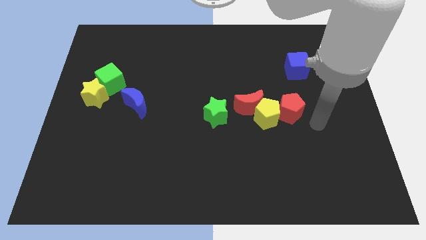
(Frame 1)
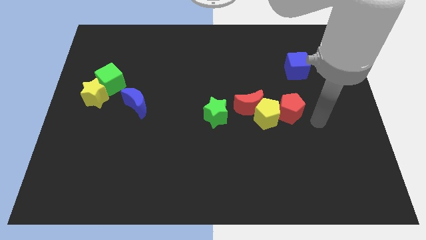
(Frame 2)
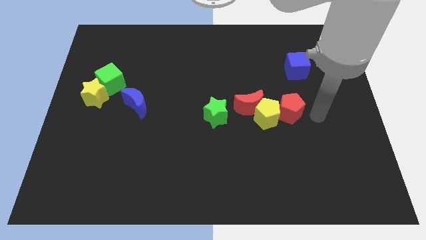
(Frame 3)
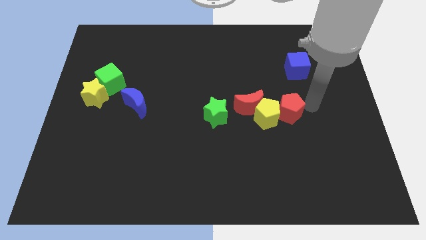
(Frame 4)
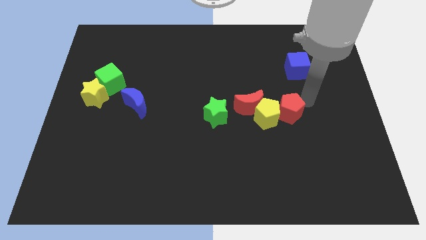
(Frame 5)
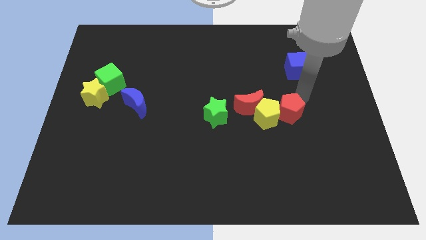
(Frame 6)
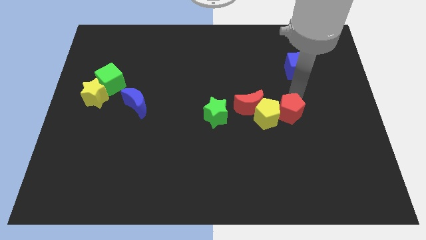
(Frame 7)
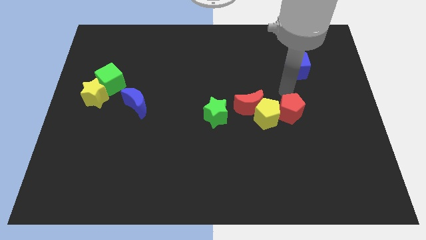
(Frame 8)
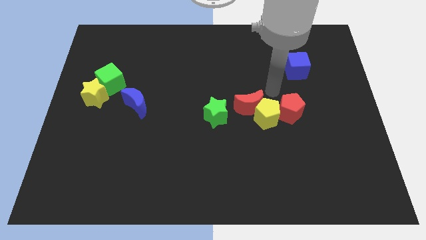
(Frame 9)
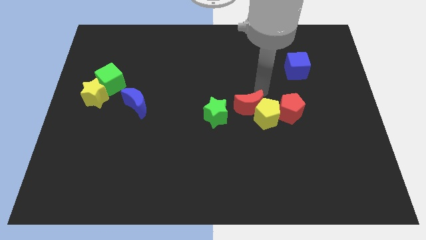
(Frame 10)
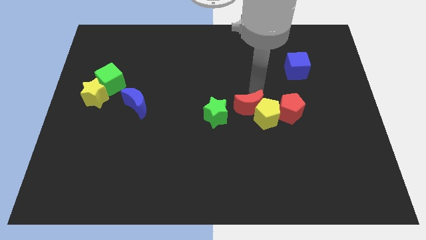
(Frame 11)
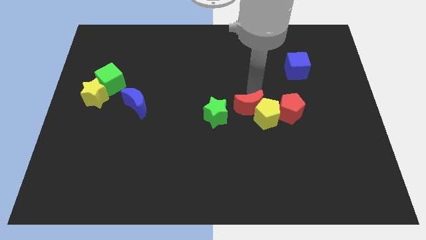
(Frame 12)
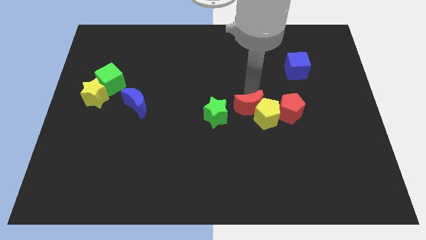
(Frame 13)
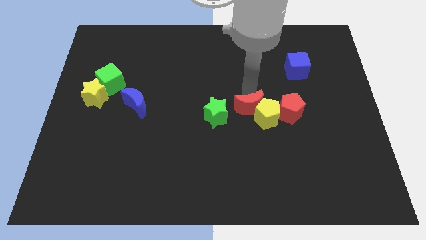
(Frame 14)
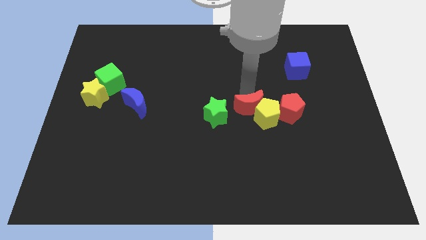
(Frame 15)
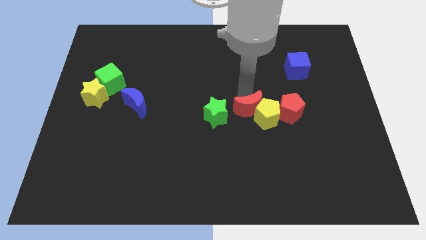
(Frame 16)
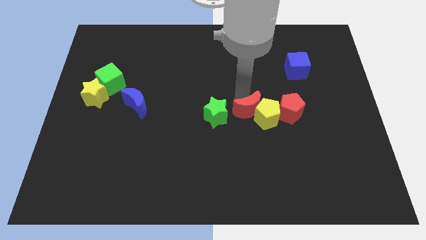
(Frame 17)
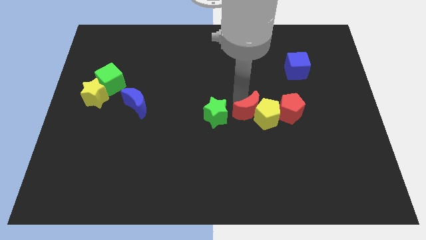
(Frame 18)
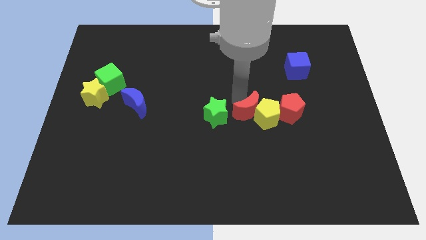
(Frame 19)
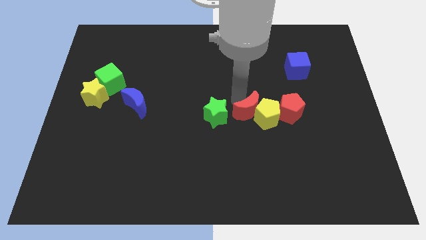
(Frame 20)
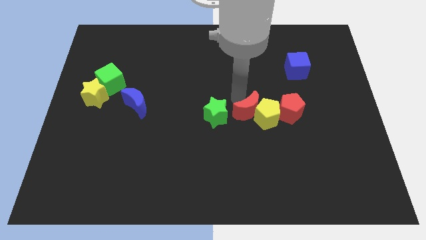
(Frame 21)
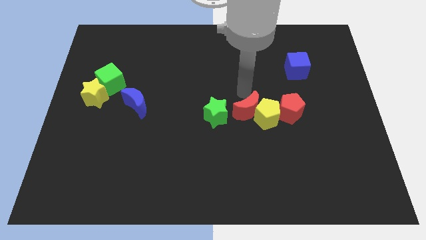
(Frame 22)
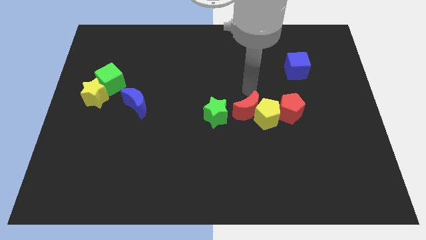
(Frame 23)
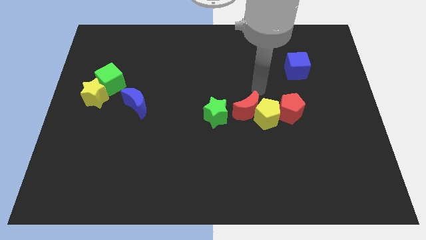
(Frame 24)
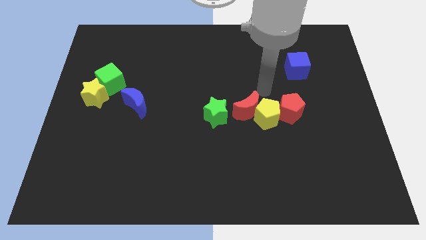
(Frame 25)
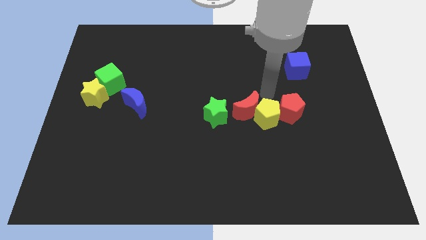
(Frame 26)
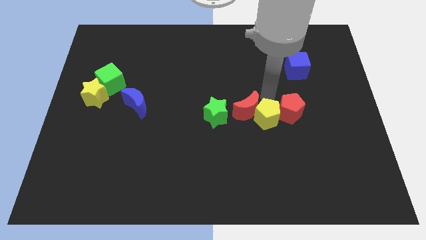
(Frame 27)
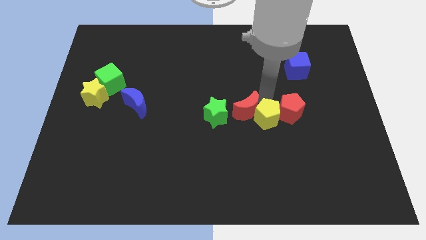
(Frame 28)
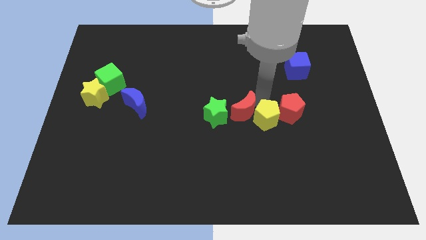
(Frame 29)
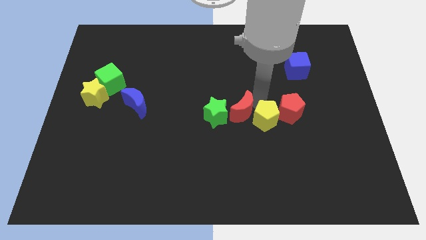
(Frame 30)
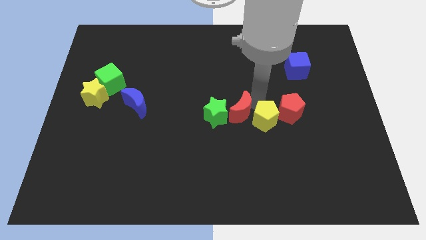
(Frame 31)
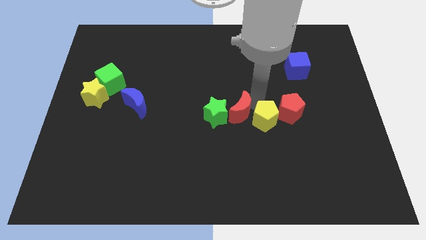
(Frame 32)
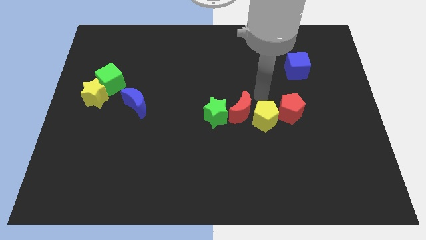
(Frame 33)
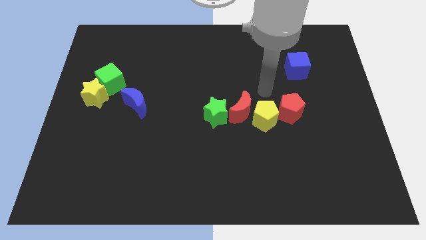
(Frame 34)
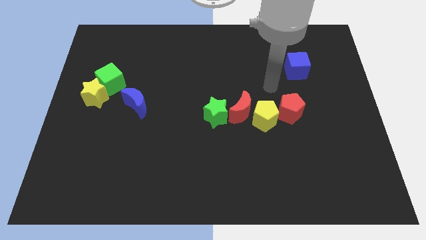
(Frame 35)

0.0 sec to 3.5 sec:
move the red moon slightly downwards

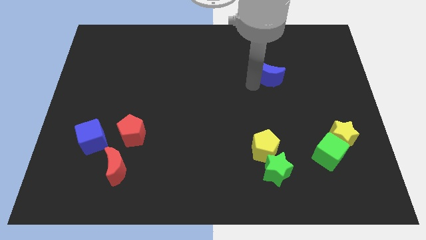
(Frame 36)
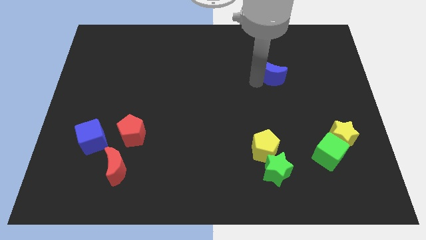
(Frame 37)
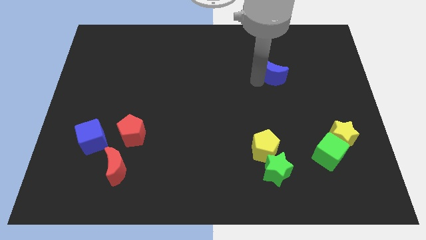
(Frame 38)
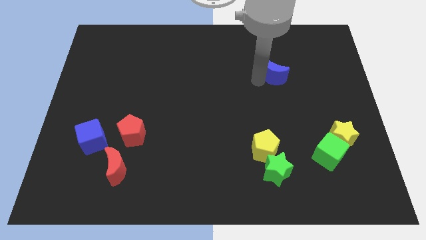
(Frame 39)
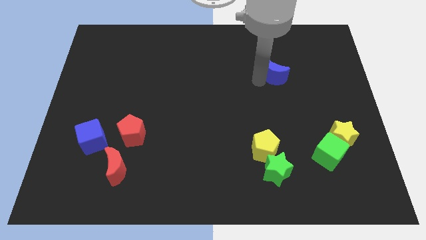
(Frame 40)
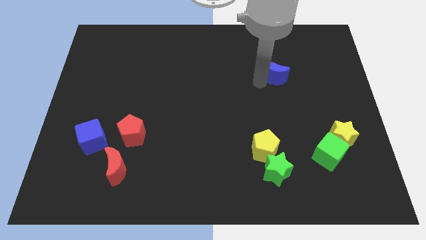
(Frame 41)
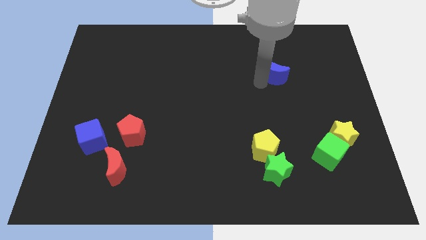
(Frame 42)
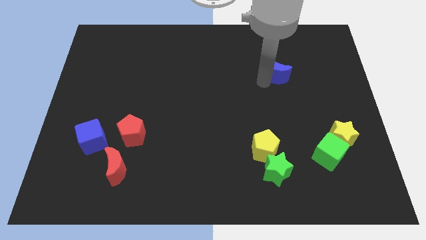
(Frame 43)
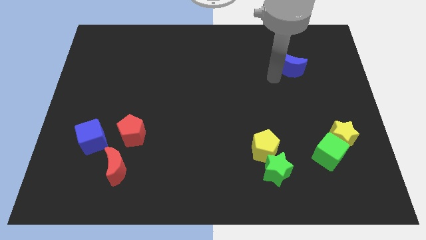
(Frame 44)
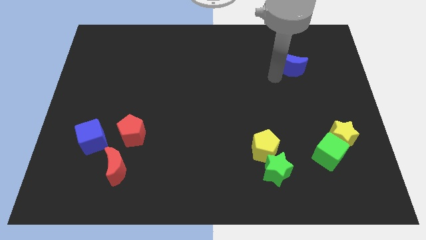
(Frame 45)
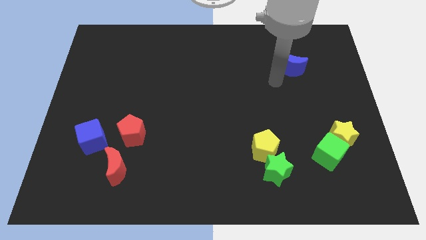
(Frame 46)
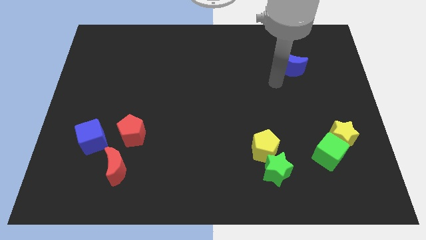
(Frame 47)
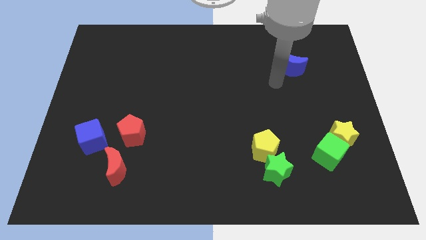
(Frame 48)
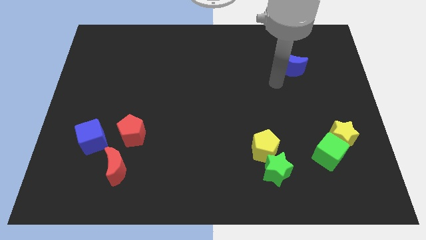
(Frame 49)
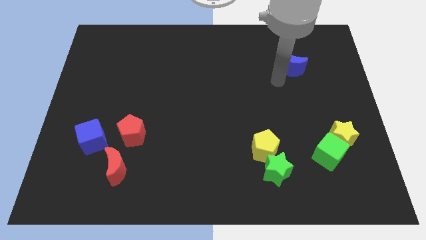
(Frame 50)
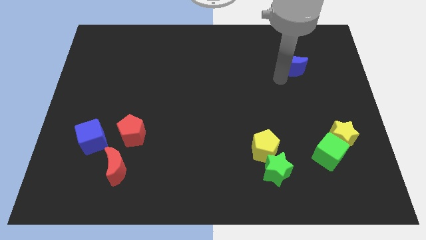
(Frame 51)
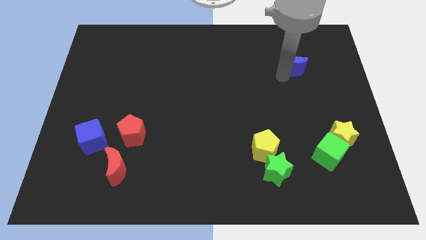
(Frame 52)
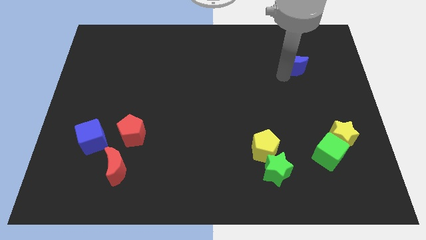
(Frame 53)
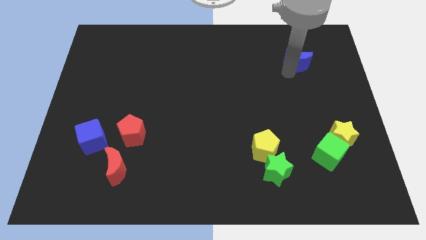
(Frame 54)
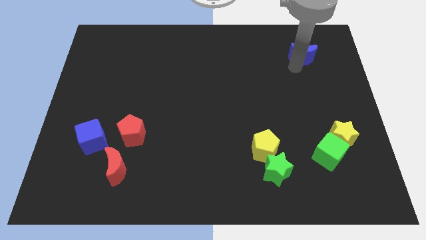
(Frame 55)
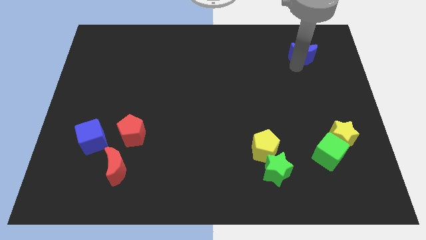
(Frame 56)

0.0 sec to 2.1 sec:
push the blue moon towards the top side of the board

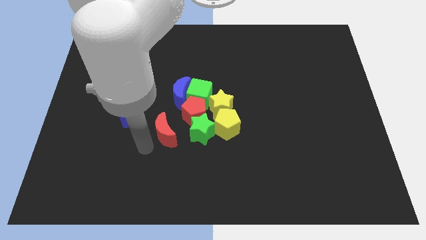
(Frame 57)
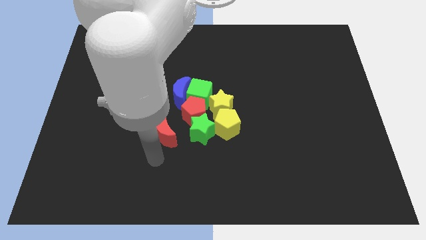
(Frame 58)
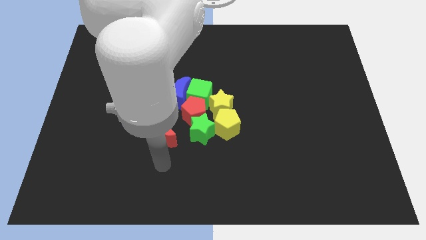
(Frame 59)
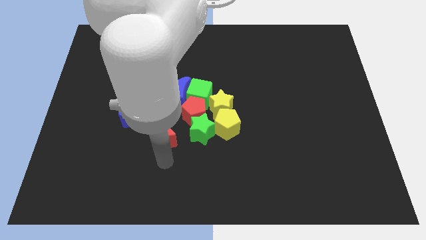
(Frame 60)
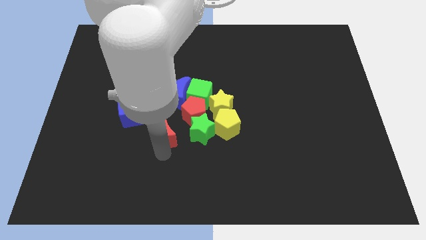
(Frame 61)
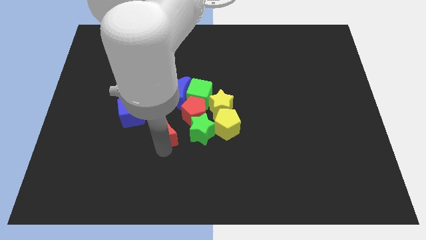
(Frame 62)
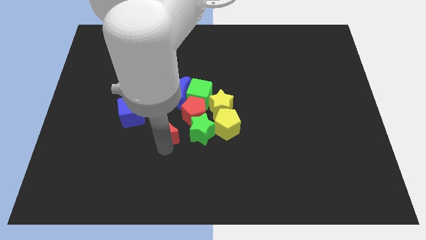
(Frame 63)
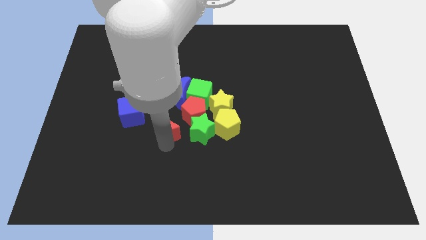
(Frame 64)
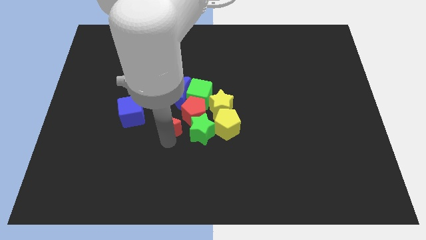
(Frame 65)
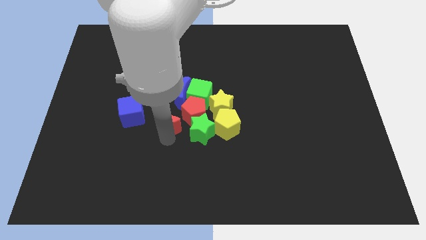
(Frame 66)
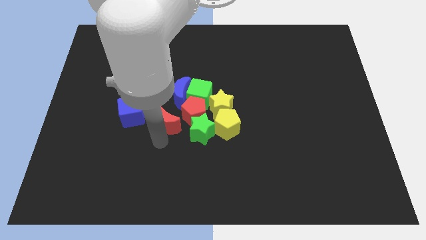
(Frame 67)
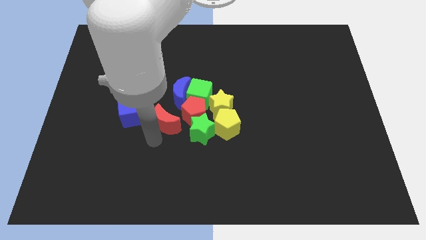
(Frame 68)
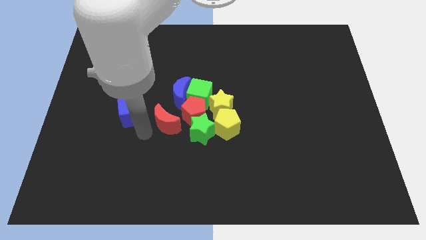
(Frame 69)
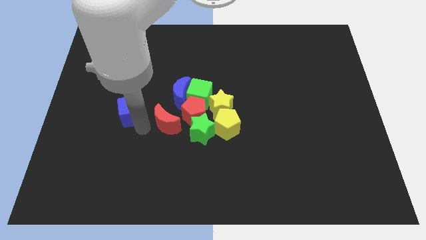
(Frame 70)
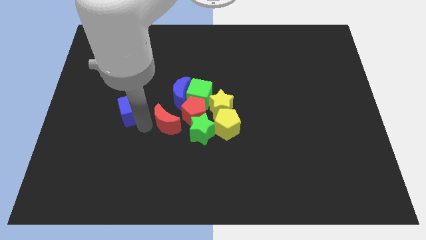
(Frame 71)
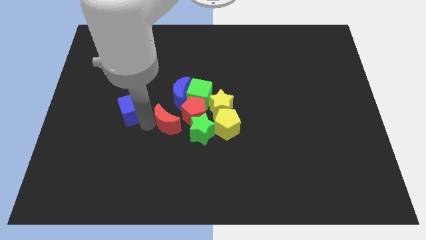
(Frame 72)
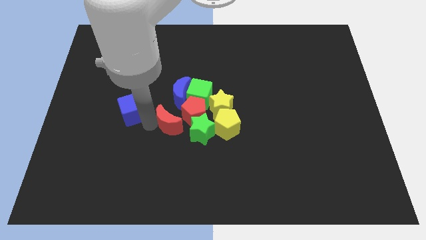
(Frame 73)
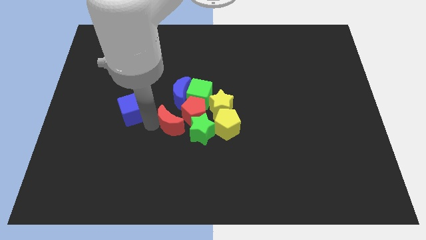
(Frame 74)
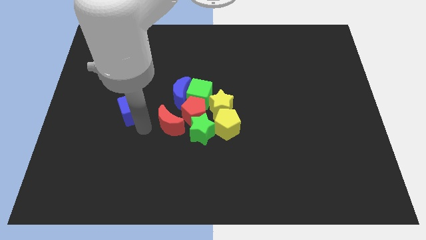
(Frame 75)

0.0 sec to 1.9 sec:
slide the red moon to the bottom left side of the red pentagon

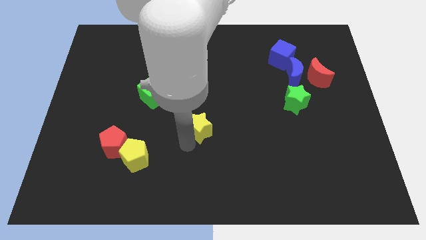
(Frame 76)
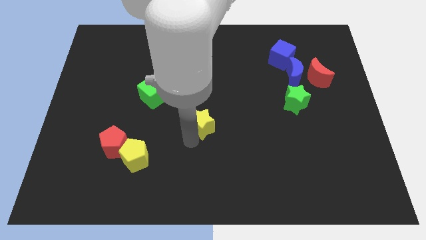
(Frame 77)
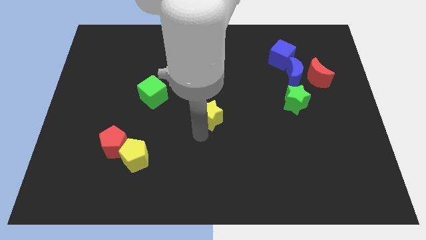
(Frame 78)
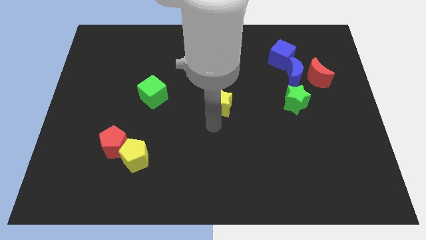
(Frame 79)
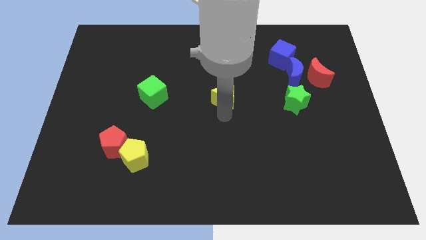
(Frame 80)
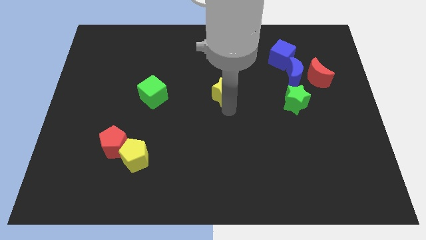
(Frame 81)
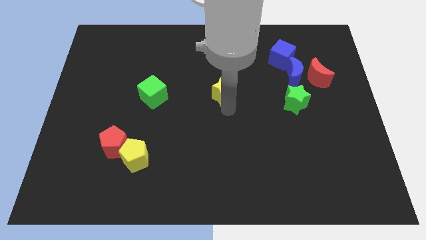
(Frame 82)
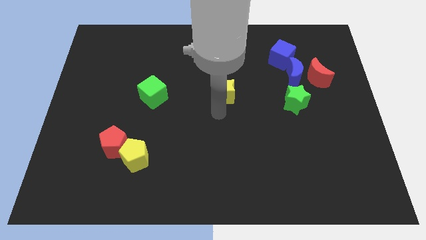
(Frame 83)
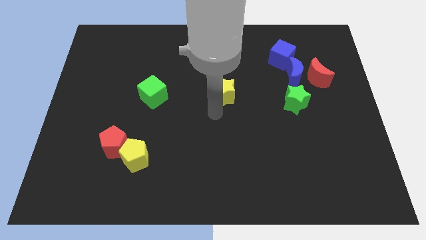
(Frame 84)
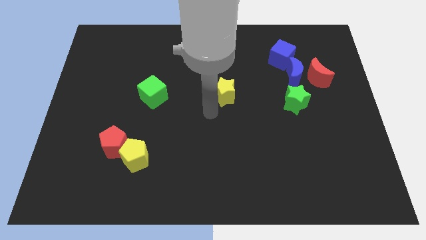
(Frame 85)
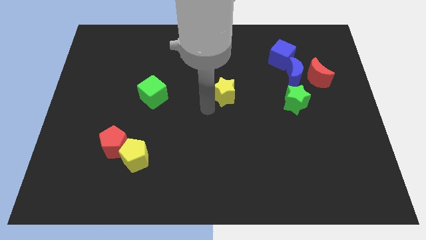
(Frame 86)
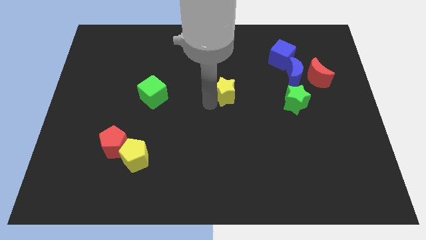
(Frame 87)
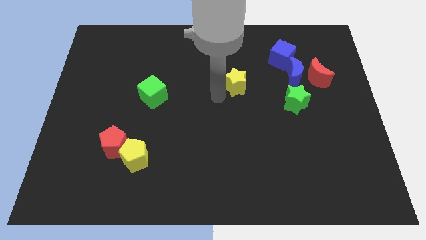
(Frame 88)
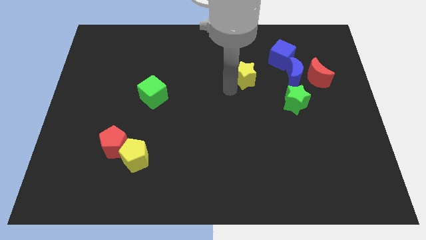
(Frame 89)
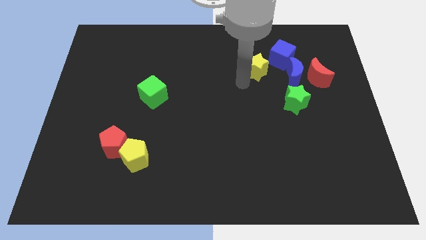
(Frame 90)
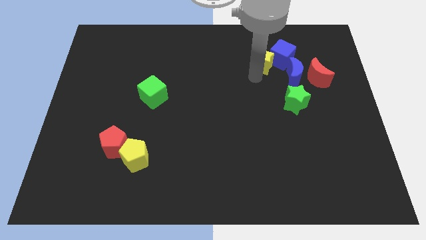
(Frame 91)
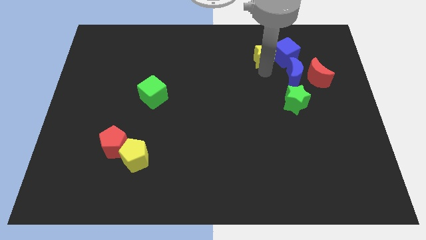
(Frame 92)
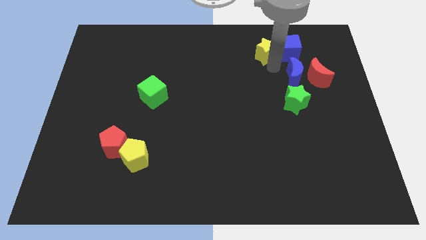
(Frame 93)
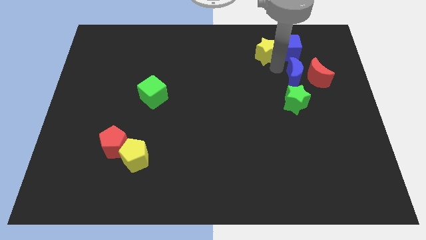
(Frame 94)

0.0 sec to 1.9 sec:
push the yellow star into the blue cube
